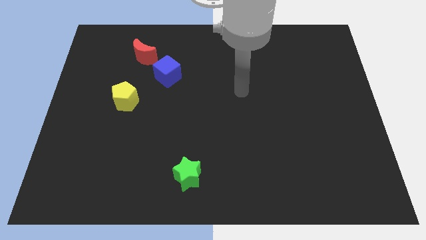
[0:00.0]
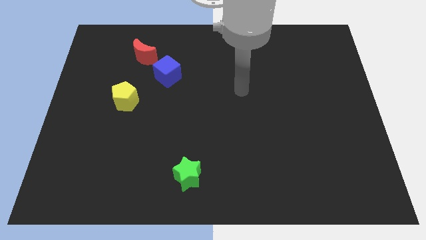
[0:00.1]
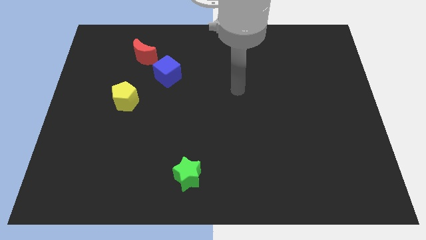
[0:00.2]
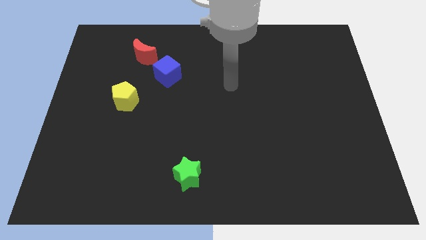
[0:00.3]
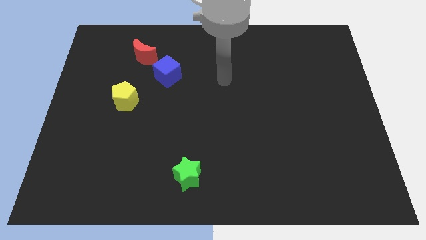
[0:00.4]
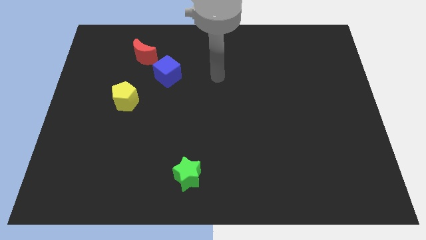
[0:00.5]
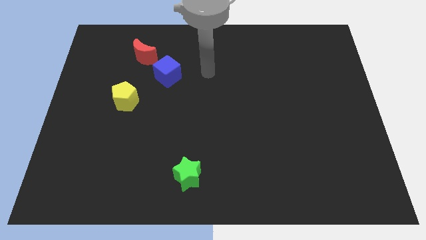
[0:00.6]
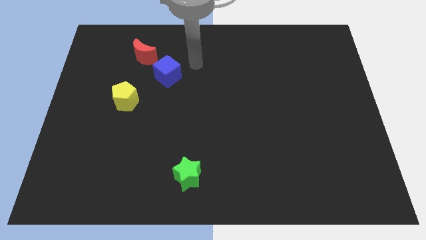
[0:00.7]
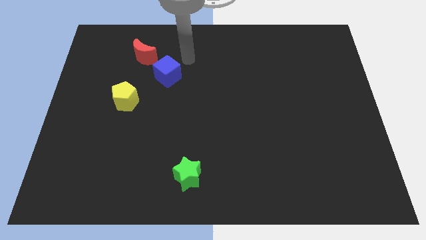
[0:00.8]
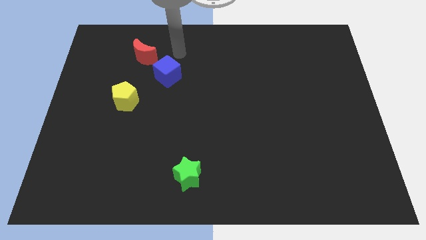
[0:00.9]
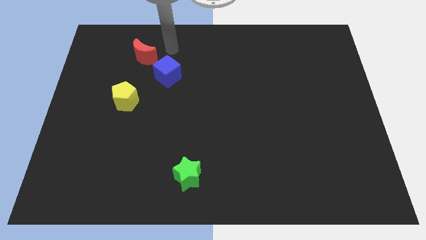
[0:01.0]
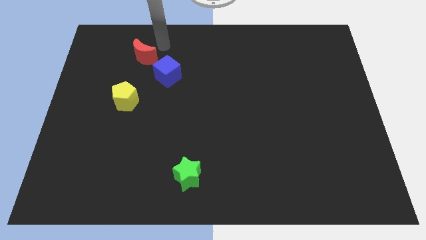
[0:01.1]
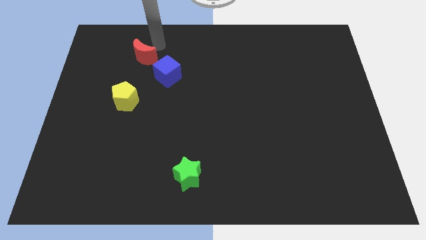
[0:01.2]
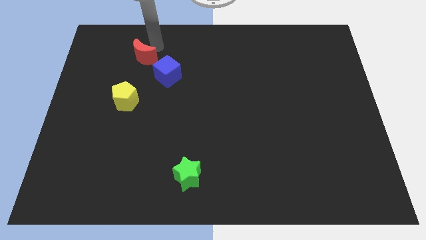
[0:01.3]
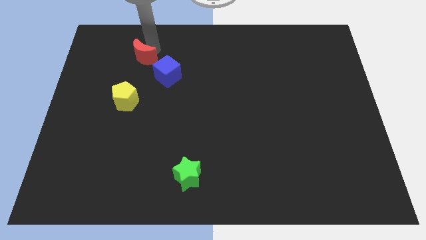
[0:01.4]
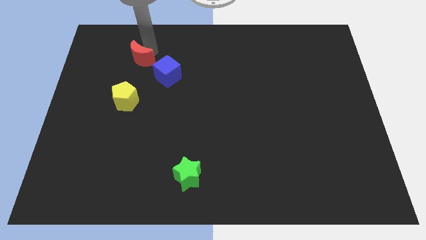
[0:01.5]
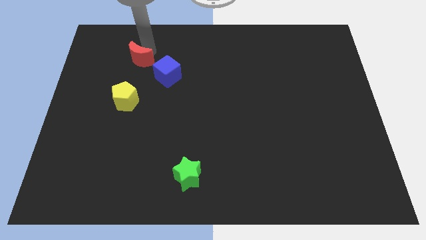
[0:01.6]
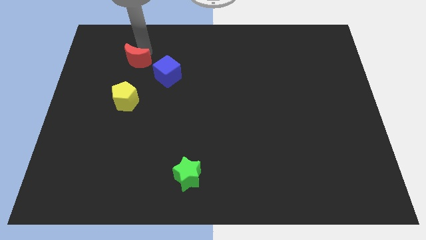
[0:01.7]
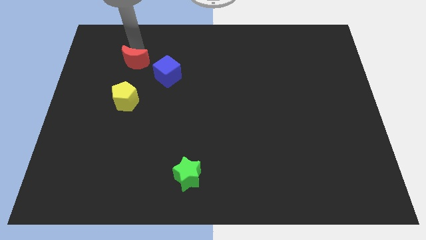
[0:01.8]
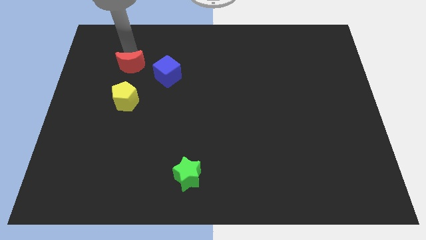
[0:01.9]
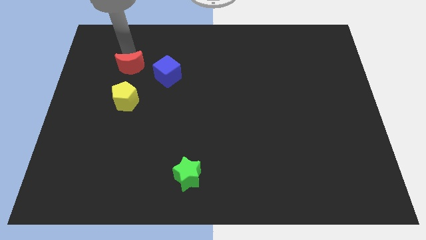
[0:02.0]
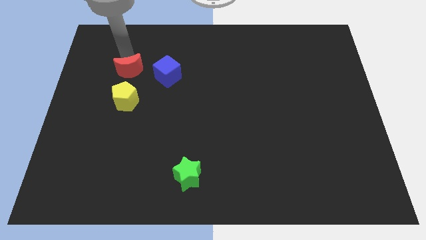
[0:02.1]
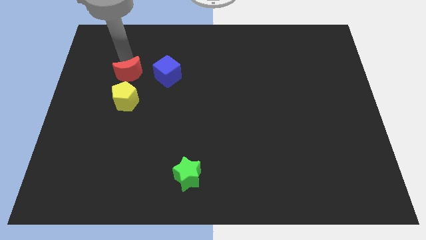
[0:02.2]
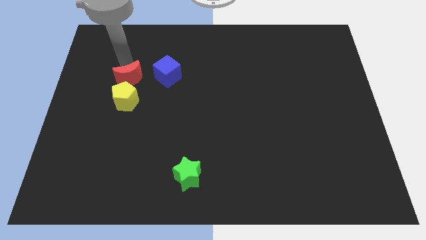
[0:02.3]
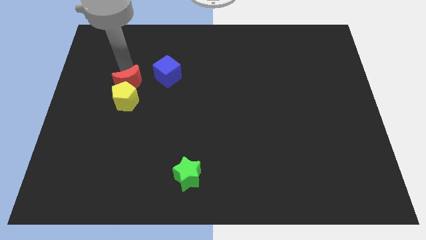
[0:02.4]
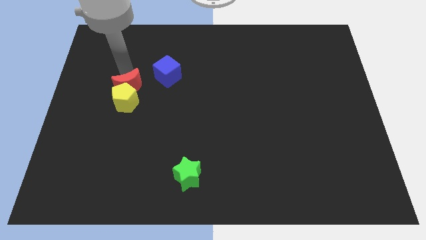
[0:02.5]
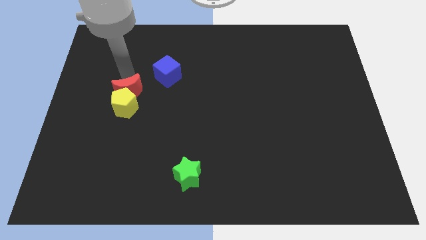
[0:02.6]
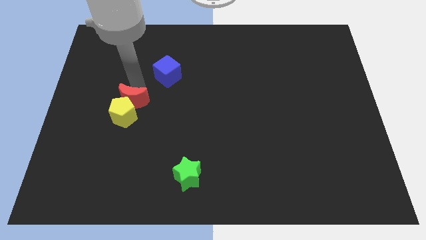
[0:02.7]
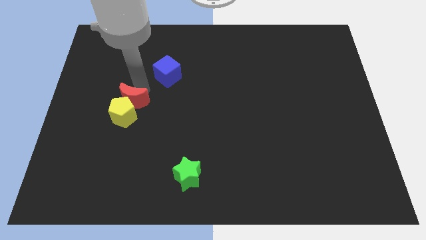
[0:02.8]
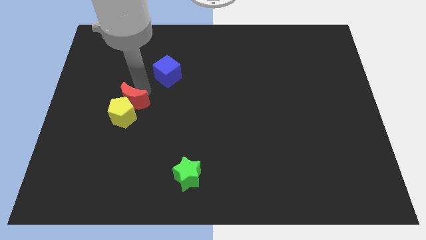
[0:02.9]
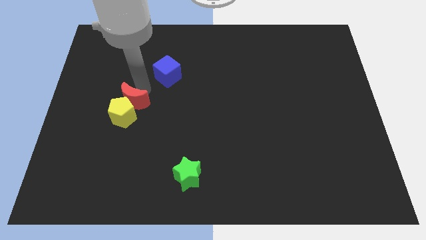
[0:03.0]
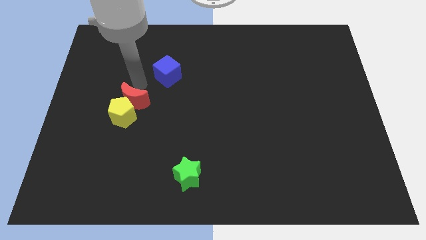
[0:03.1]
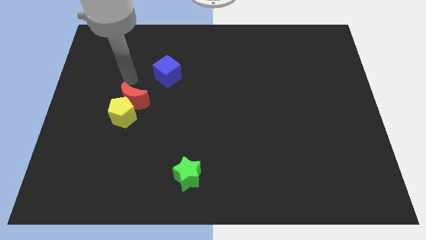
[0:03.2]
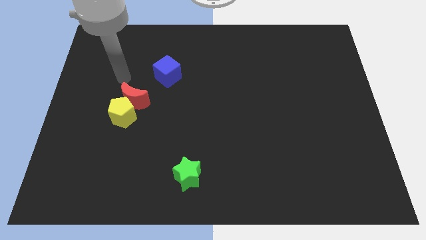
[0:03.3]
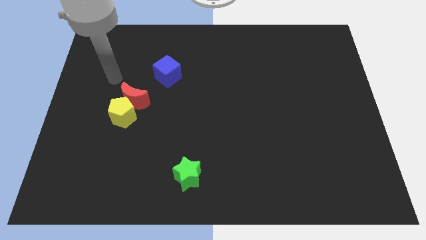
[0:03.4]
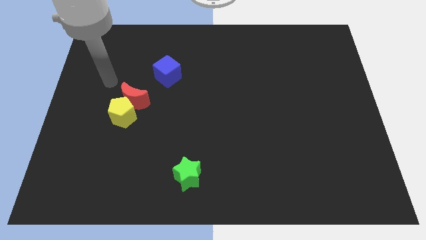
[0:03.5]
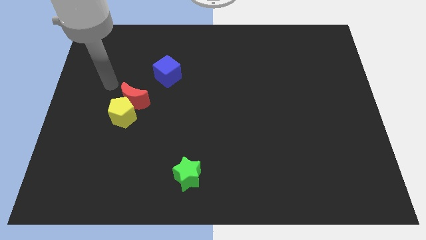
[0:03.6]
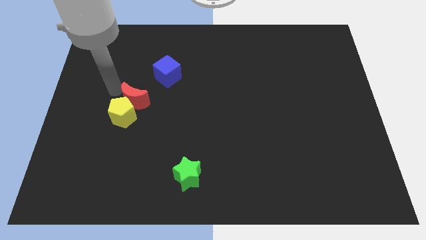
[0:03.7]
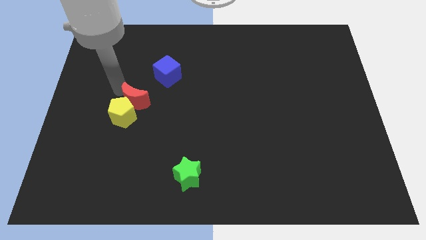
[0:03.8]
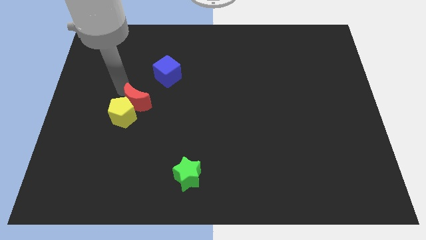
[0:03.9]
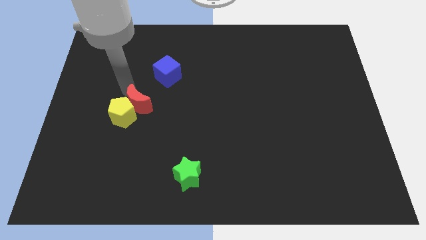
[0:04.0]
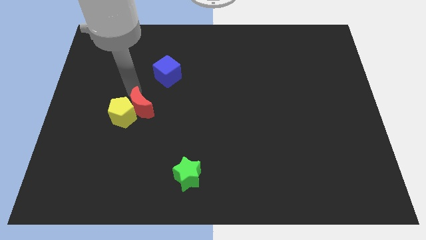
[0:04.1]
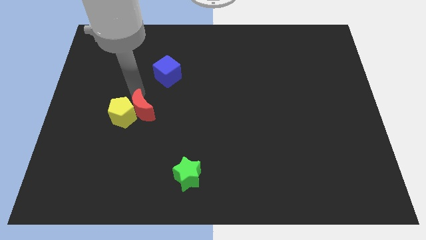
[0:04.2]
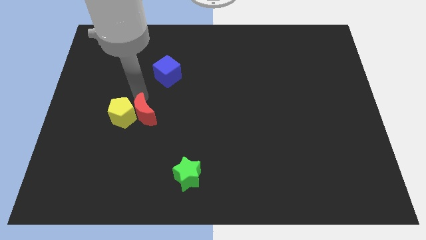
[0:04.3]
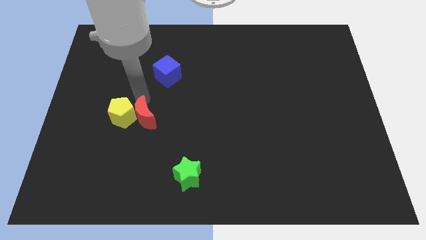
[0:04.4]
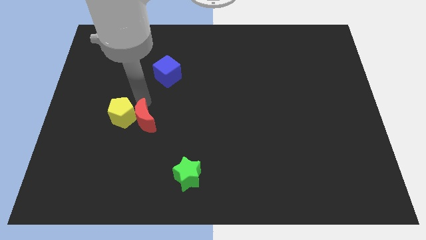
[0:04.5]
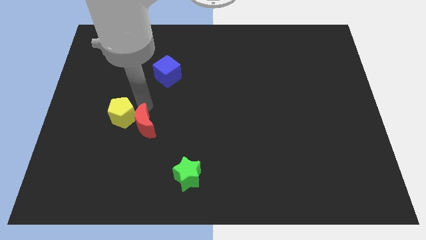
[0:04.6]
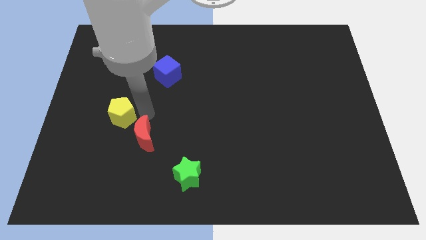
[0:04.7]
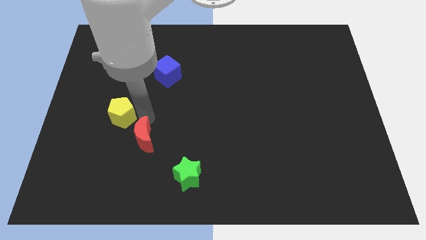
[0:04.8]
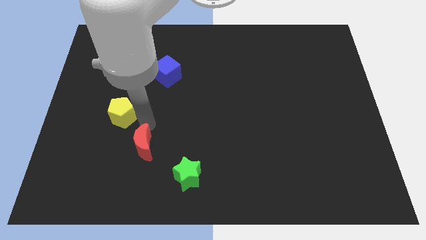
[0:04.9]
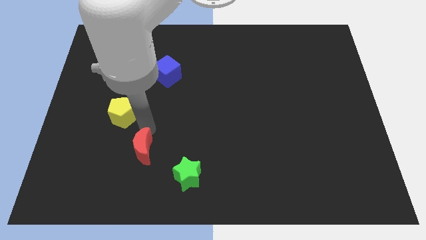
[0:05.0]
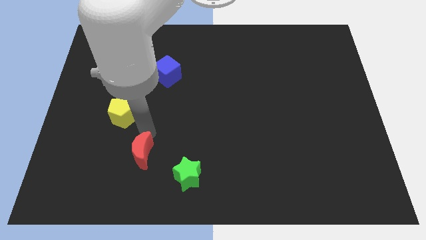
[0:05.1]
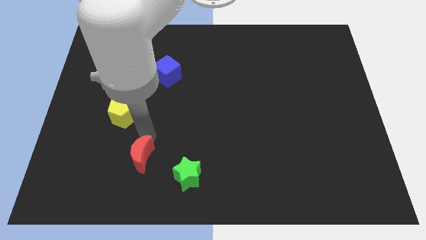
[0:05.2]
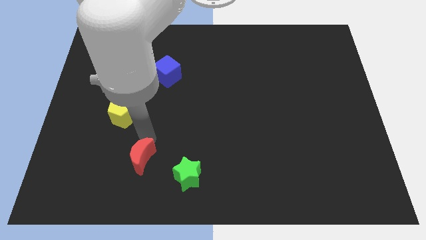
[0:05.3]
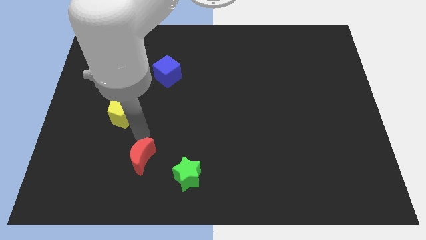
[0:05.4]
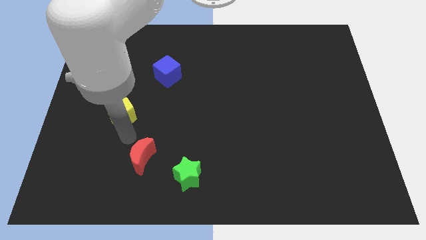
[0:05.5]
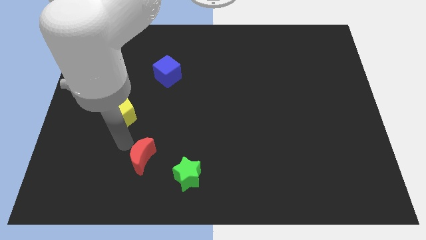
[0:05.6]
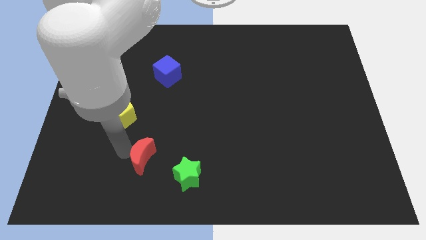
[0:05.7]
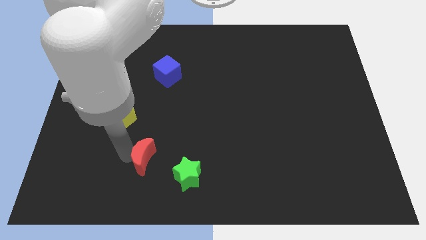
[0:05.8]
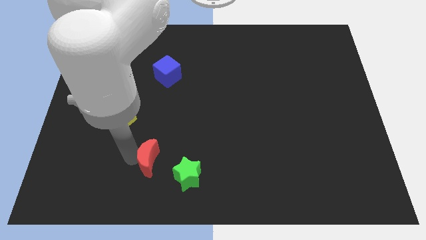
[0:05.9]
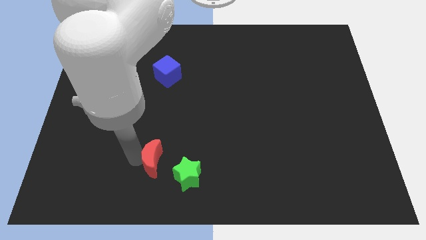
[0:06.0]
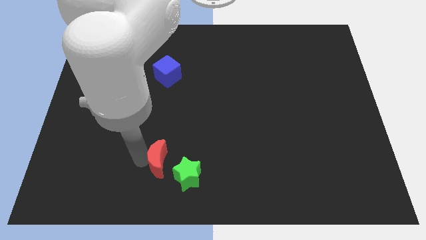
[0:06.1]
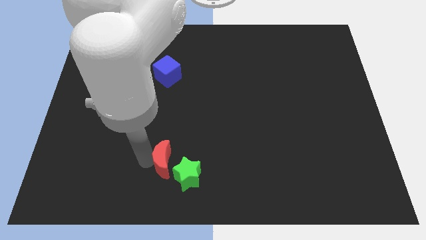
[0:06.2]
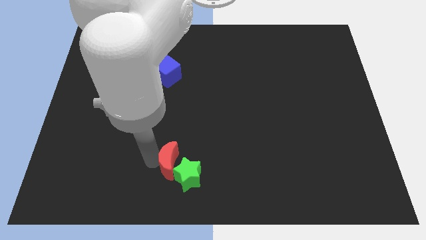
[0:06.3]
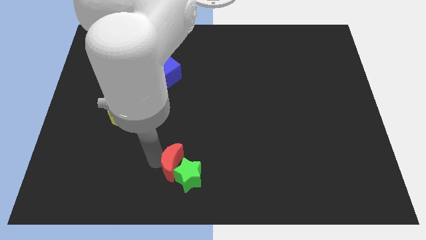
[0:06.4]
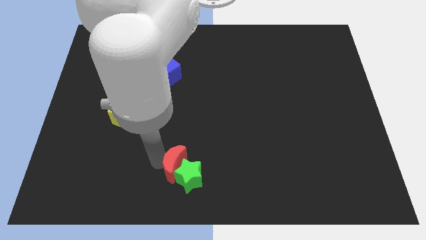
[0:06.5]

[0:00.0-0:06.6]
move the moon to the green star

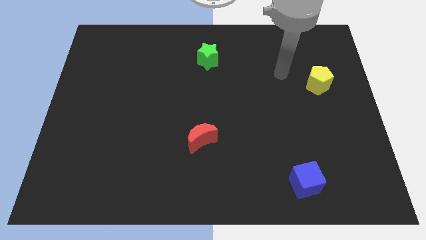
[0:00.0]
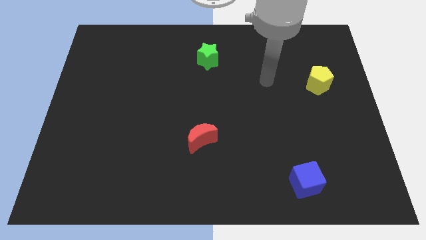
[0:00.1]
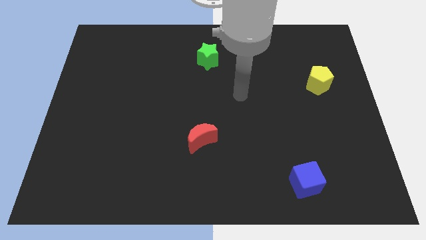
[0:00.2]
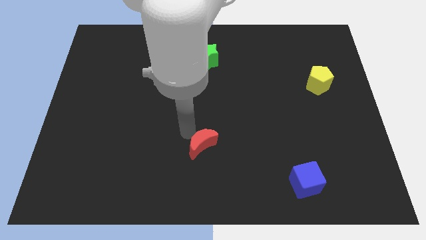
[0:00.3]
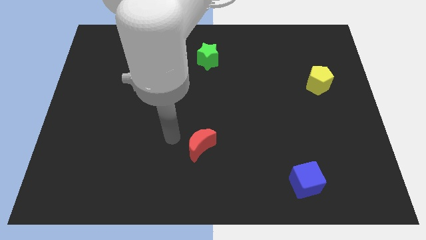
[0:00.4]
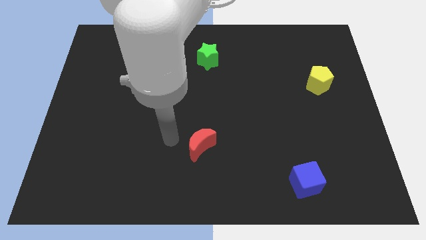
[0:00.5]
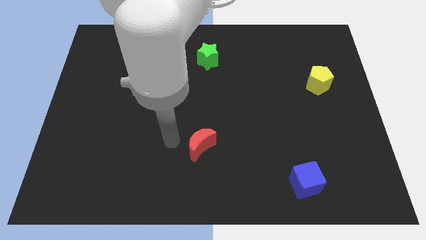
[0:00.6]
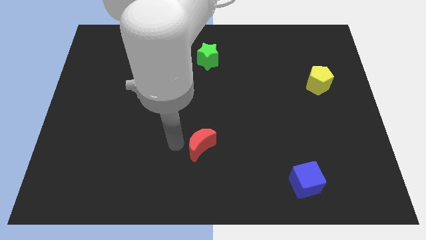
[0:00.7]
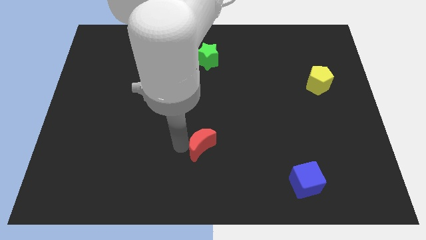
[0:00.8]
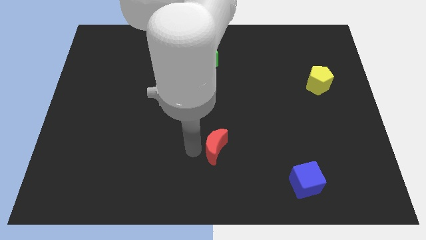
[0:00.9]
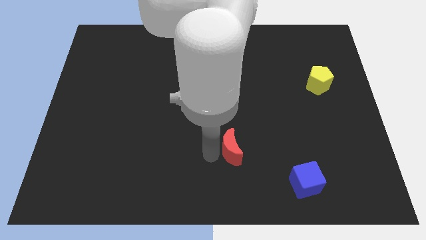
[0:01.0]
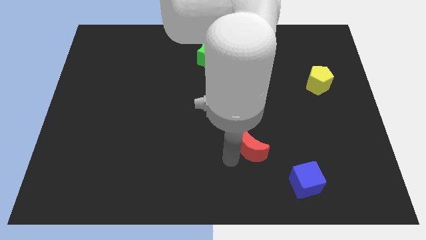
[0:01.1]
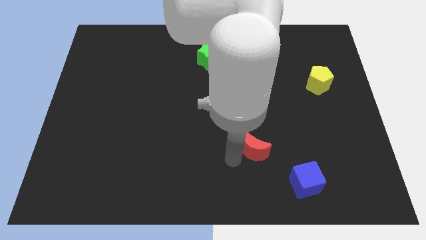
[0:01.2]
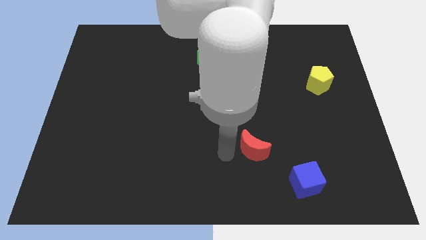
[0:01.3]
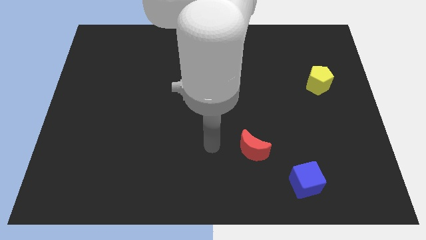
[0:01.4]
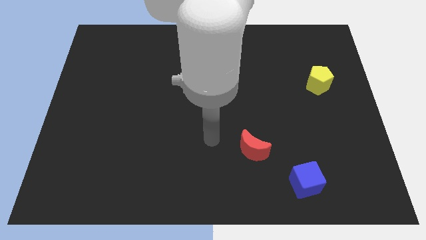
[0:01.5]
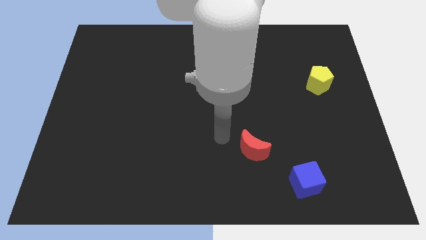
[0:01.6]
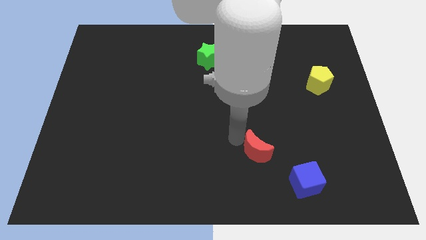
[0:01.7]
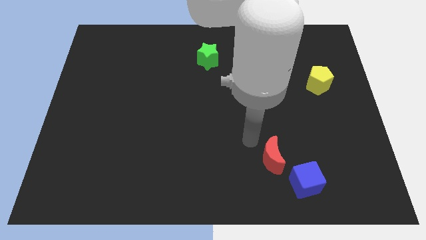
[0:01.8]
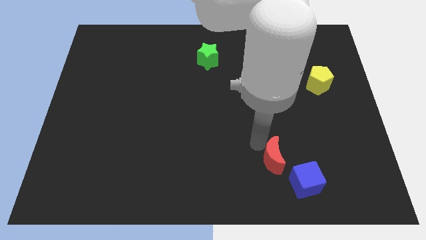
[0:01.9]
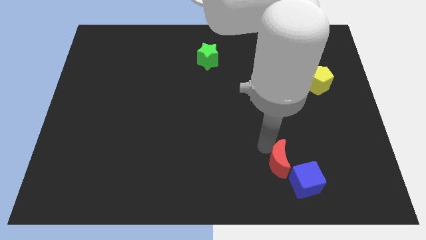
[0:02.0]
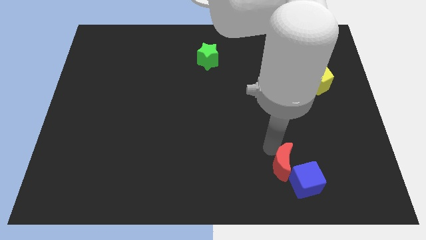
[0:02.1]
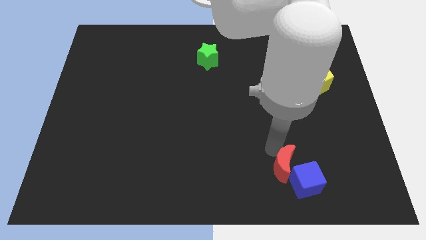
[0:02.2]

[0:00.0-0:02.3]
slide the red moon towards the blue cube
